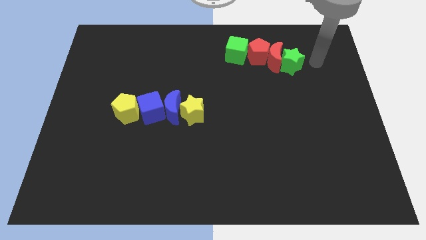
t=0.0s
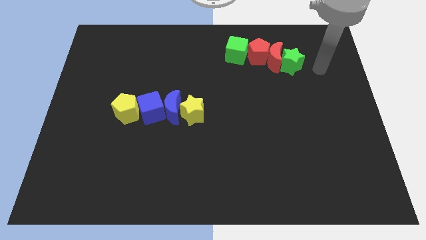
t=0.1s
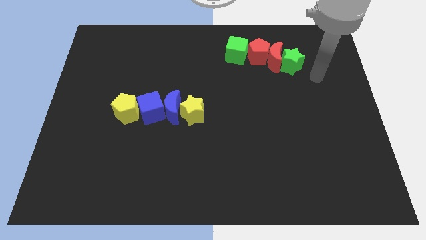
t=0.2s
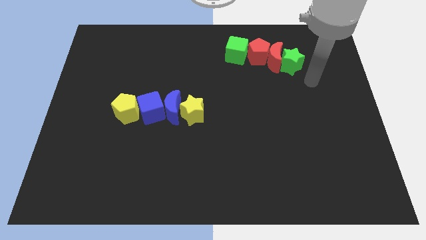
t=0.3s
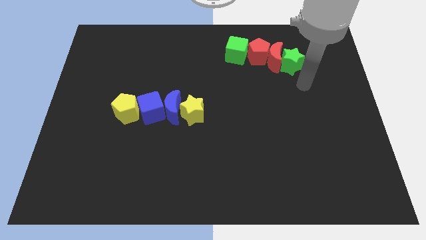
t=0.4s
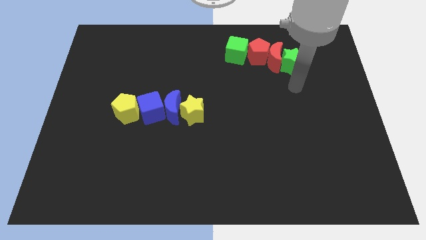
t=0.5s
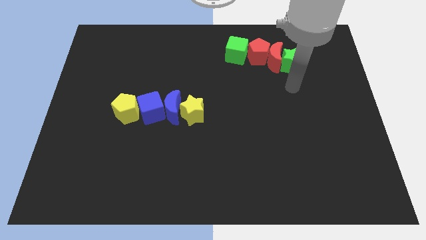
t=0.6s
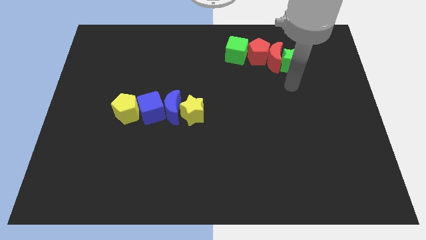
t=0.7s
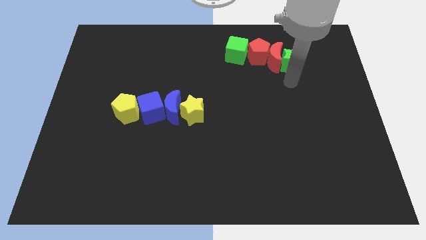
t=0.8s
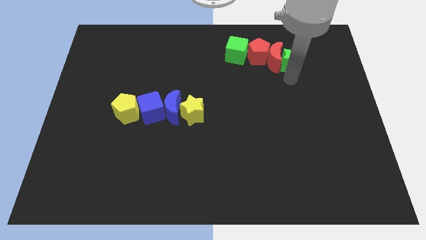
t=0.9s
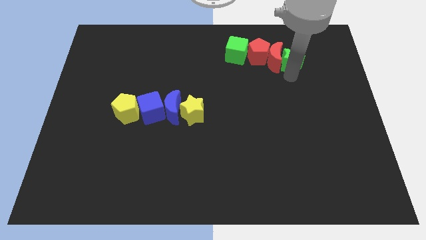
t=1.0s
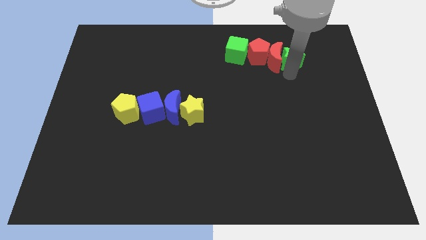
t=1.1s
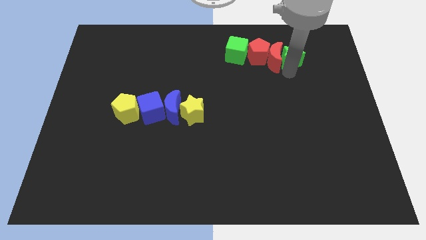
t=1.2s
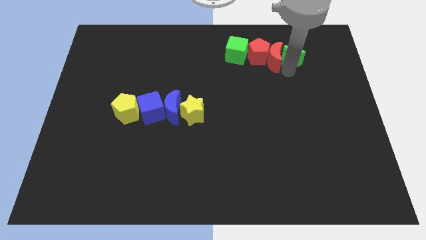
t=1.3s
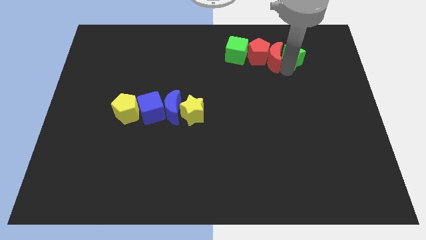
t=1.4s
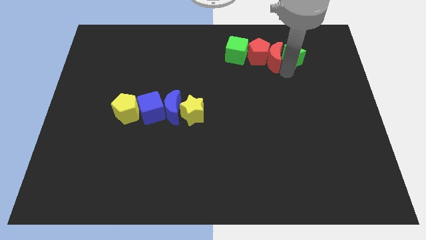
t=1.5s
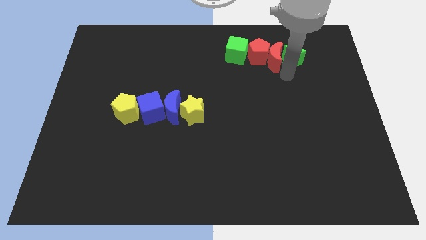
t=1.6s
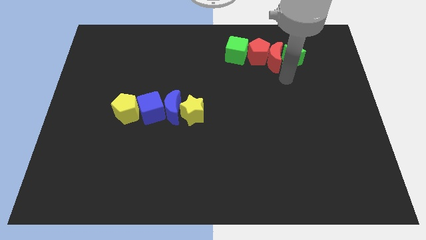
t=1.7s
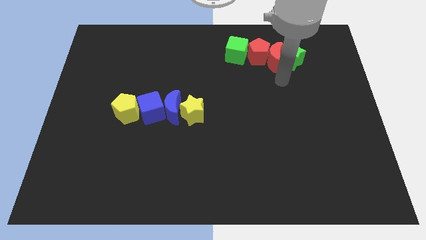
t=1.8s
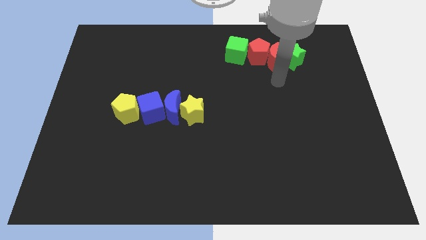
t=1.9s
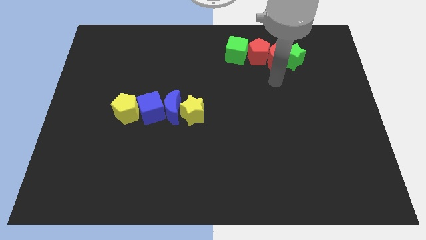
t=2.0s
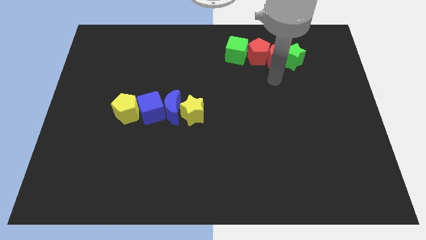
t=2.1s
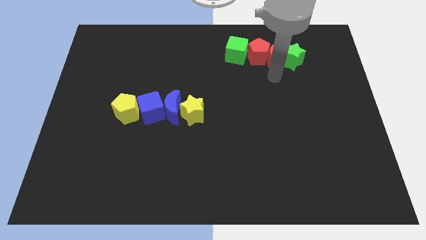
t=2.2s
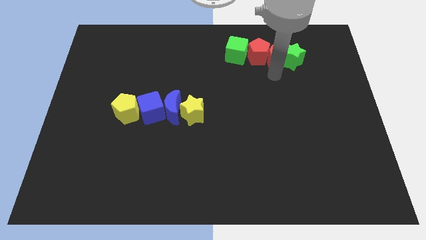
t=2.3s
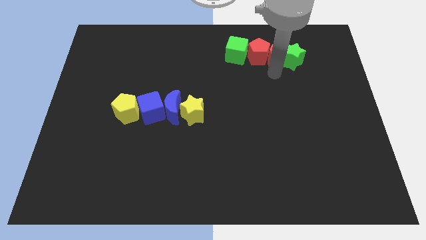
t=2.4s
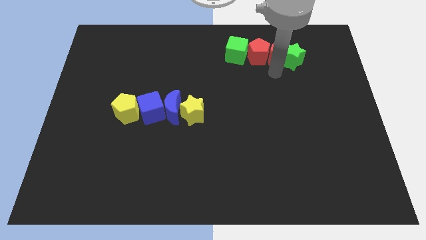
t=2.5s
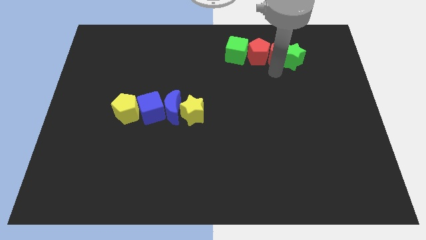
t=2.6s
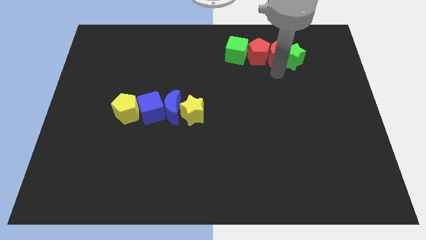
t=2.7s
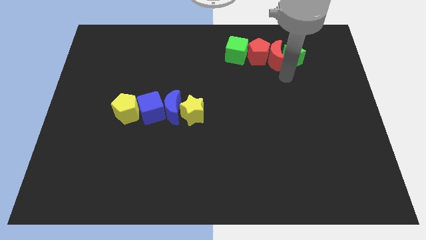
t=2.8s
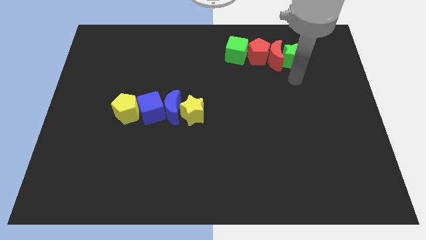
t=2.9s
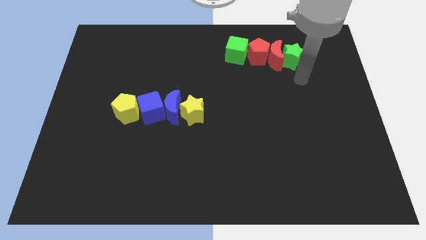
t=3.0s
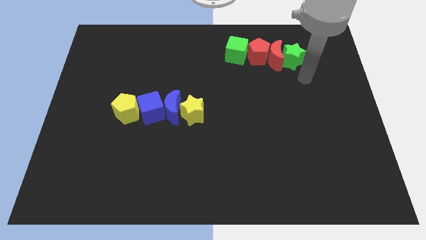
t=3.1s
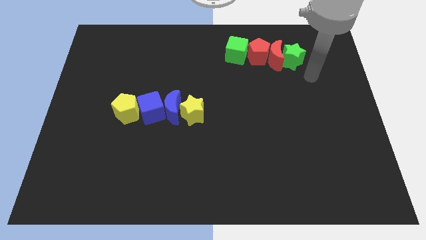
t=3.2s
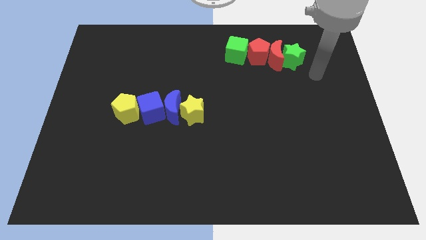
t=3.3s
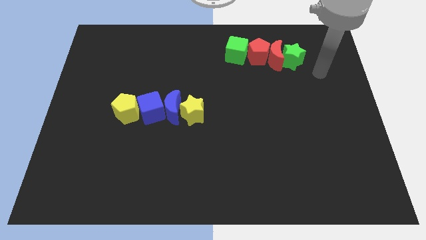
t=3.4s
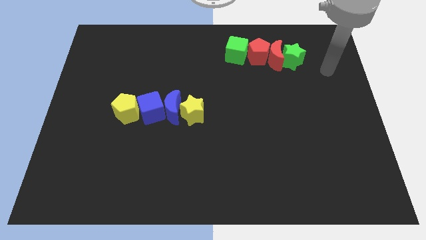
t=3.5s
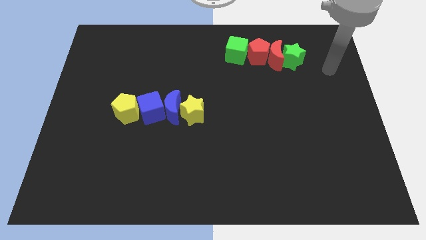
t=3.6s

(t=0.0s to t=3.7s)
adjust the red blocks and green blocks in a horizontal line

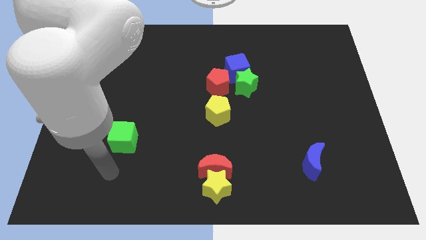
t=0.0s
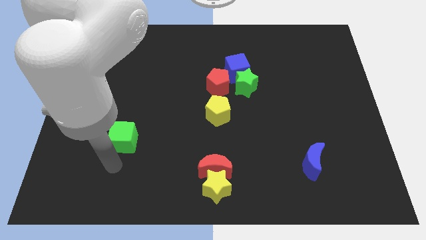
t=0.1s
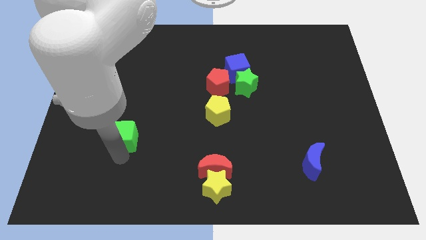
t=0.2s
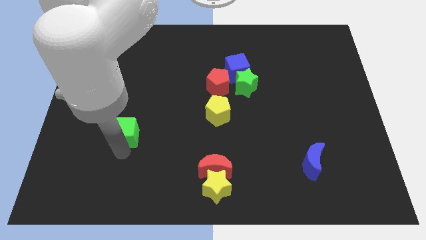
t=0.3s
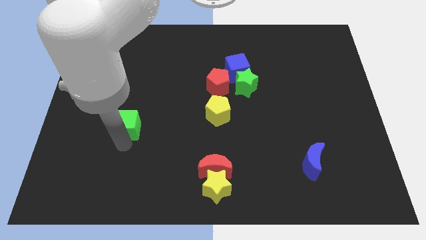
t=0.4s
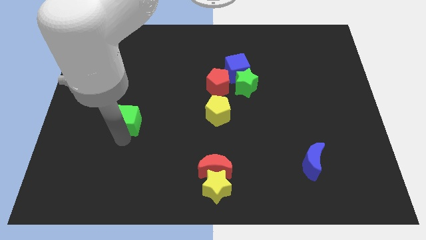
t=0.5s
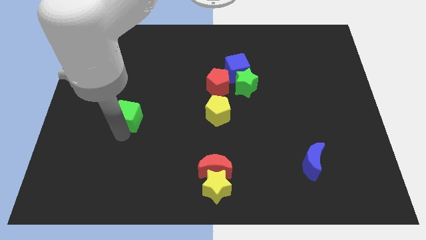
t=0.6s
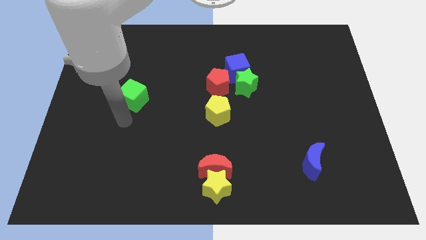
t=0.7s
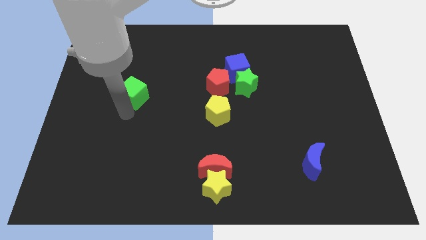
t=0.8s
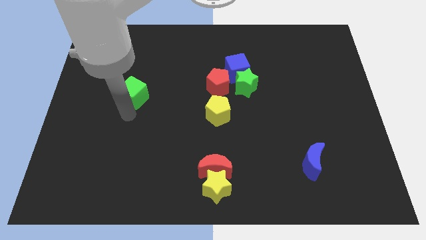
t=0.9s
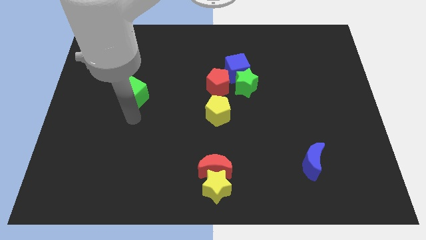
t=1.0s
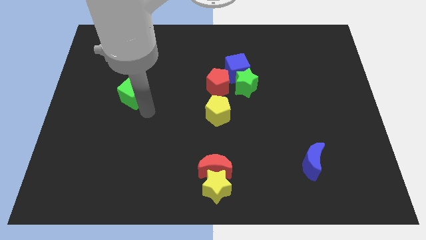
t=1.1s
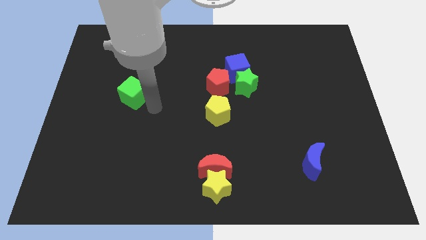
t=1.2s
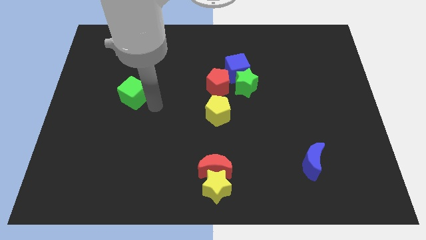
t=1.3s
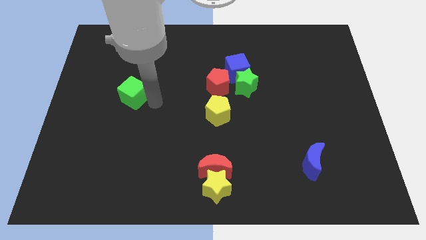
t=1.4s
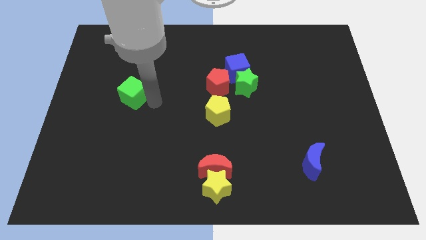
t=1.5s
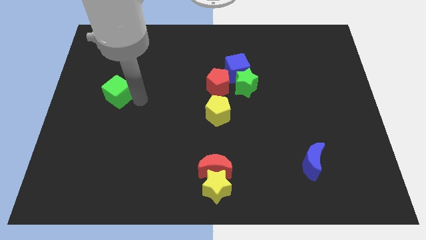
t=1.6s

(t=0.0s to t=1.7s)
place green cube adjacent to the red pentagon

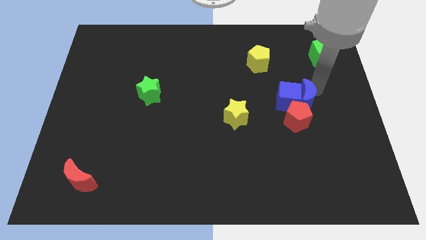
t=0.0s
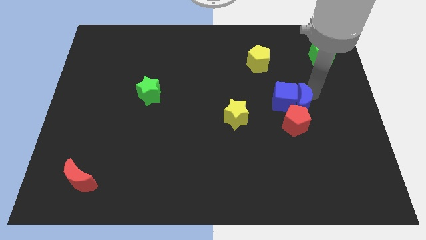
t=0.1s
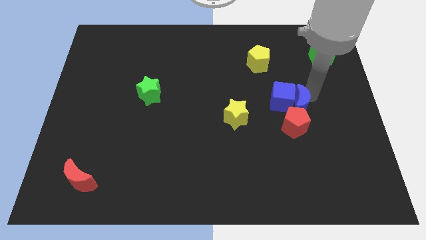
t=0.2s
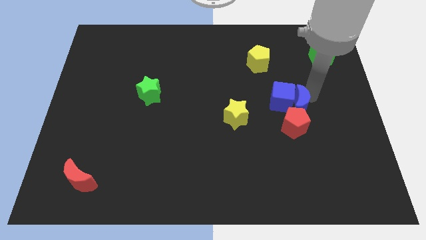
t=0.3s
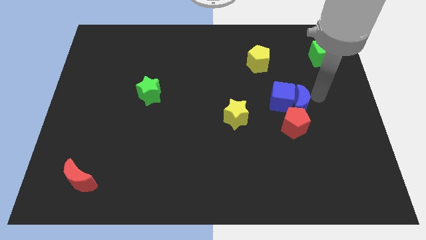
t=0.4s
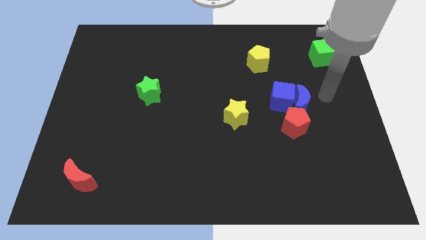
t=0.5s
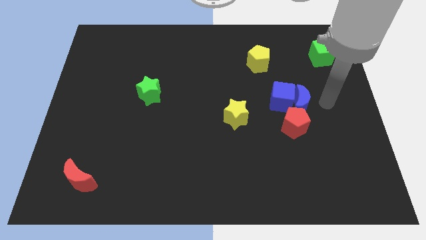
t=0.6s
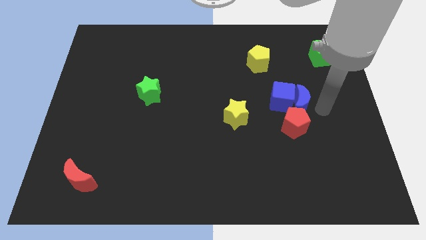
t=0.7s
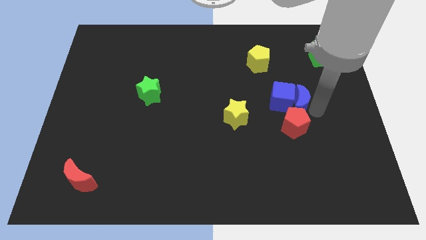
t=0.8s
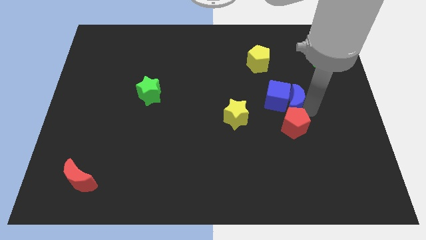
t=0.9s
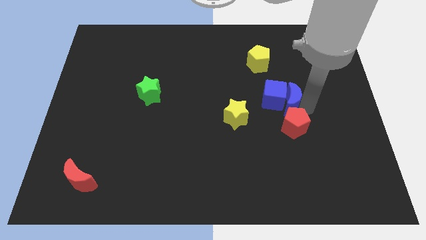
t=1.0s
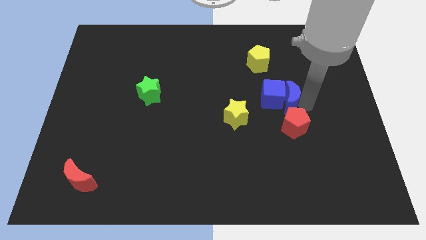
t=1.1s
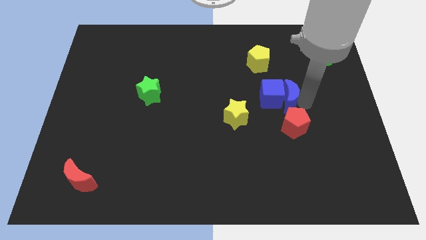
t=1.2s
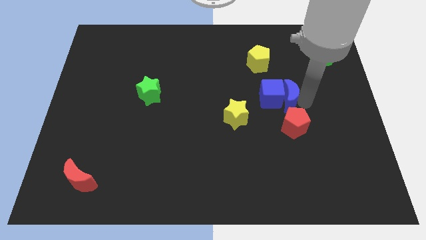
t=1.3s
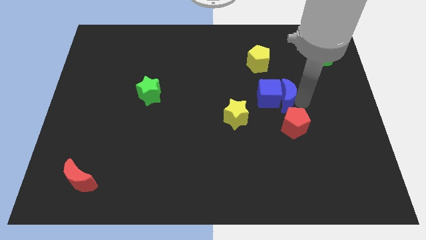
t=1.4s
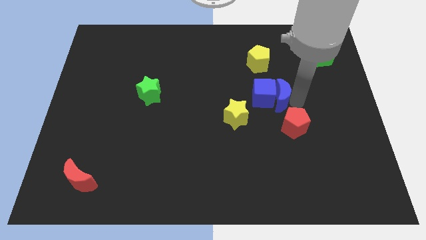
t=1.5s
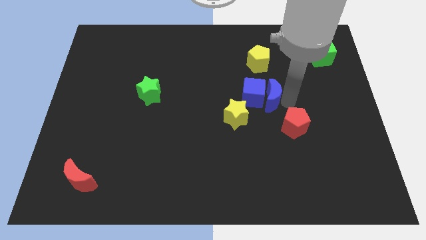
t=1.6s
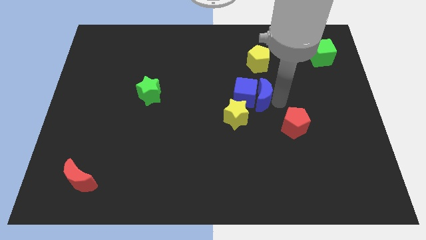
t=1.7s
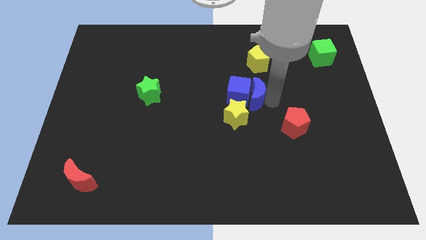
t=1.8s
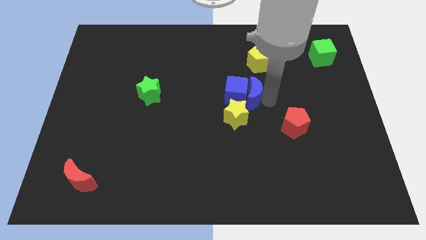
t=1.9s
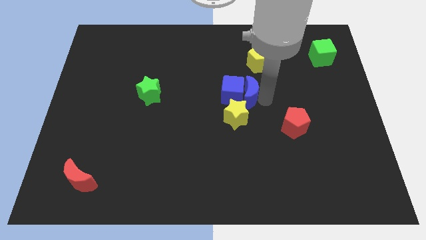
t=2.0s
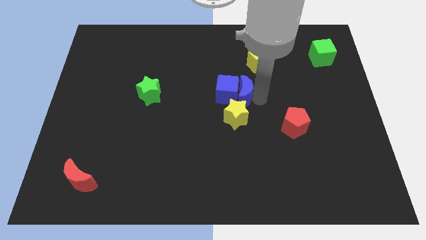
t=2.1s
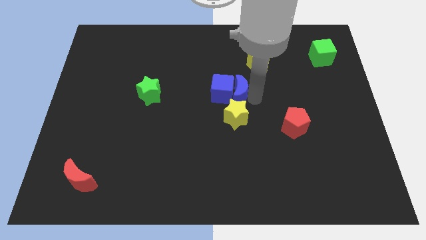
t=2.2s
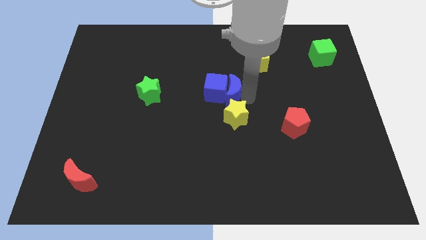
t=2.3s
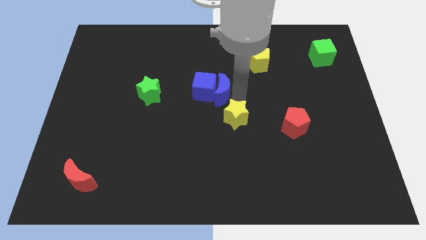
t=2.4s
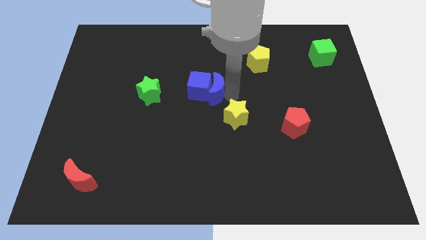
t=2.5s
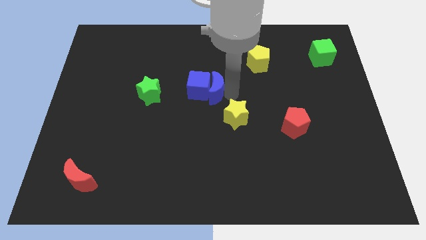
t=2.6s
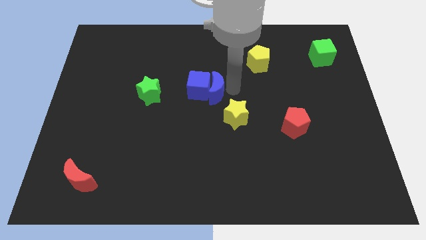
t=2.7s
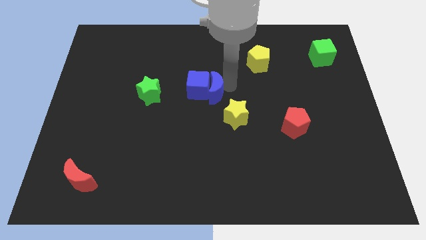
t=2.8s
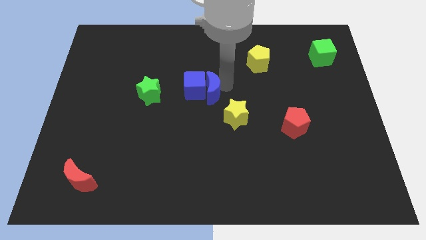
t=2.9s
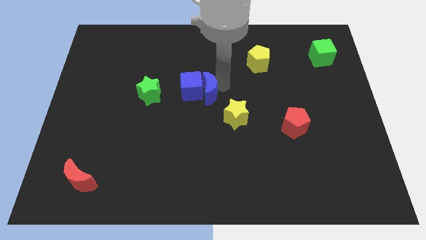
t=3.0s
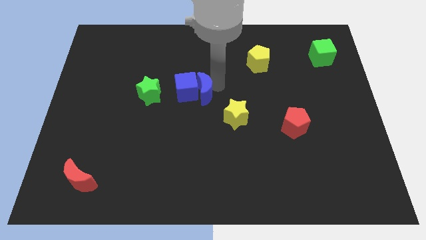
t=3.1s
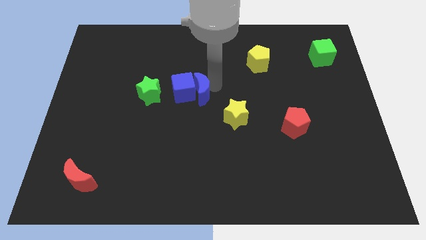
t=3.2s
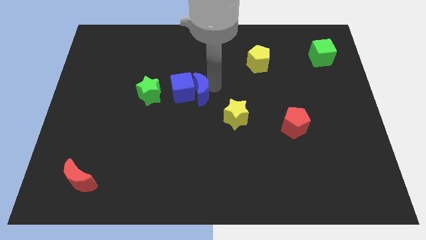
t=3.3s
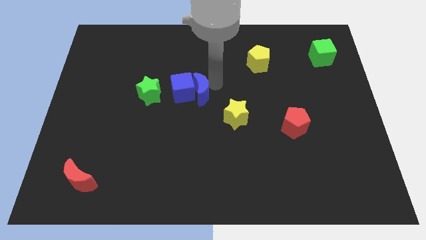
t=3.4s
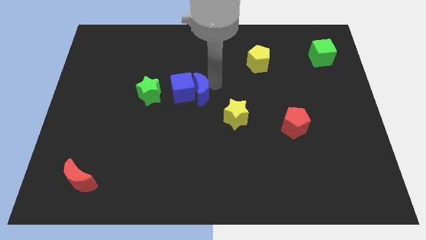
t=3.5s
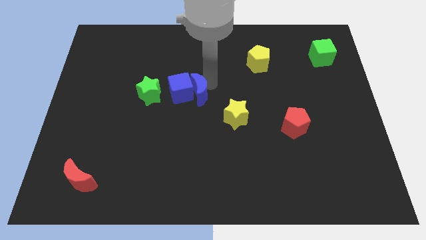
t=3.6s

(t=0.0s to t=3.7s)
drag the blue blocks right to the green star
